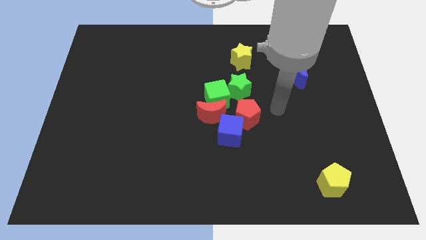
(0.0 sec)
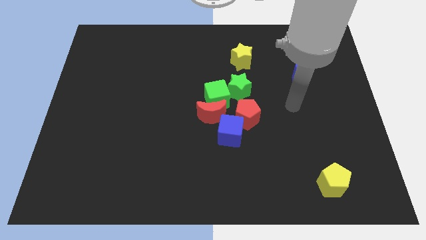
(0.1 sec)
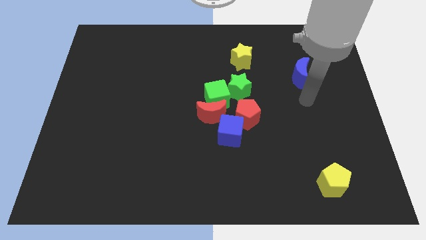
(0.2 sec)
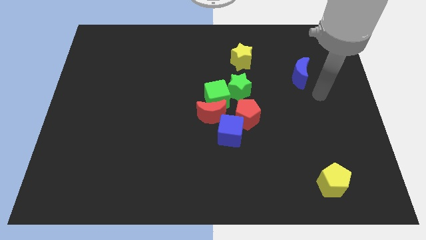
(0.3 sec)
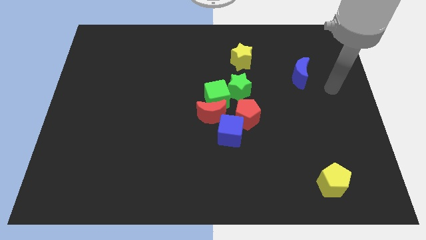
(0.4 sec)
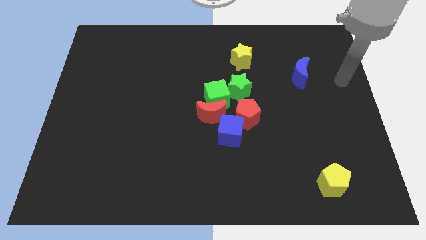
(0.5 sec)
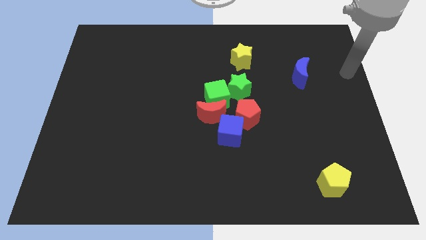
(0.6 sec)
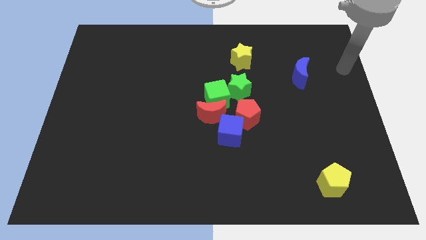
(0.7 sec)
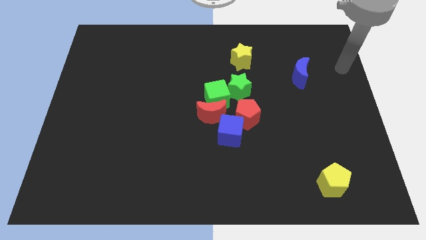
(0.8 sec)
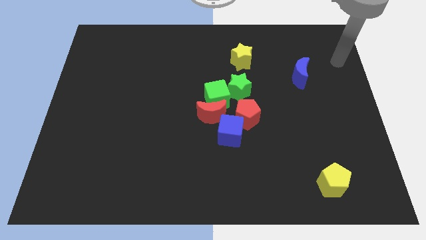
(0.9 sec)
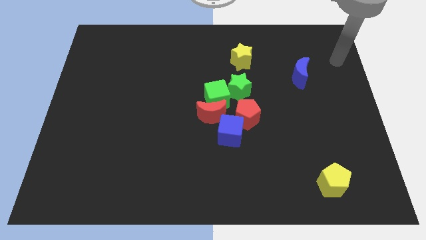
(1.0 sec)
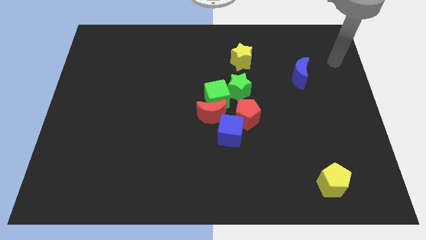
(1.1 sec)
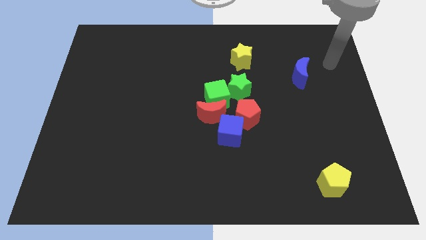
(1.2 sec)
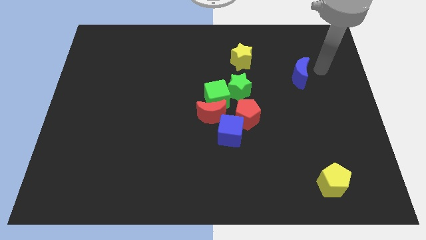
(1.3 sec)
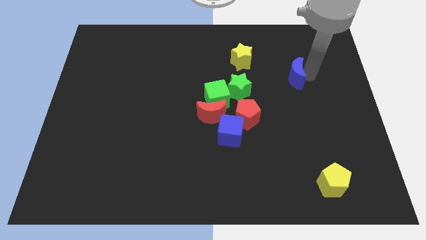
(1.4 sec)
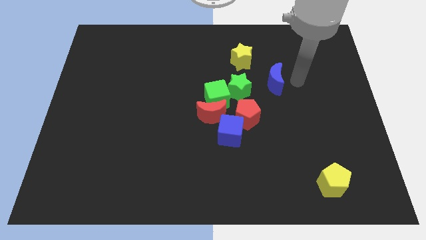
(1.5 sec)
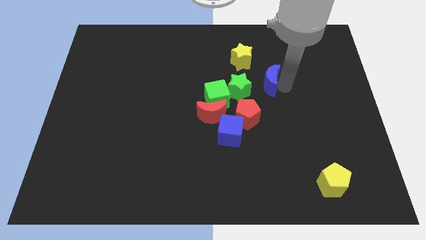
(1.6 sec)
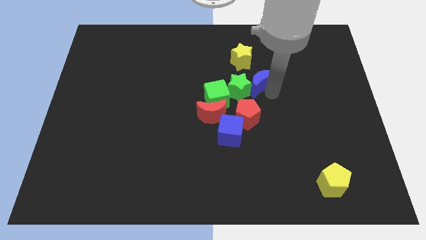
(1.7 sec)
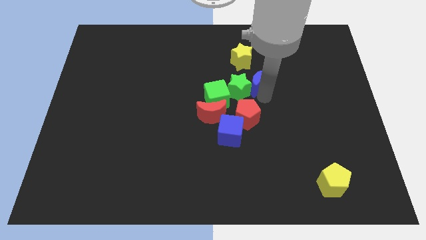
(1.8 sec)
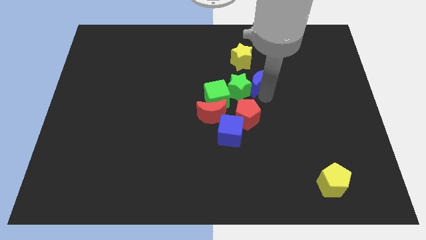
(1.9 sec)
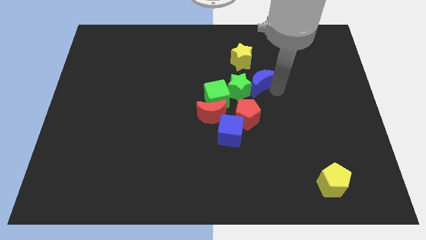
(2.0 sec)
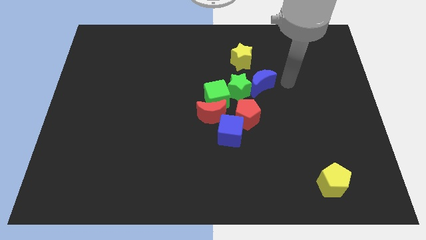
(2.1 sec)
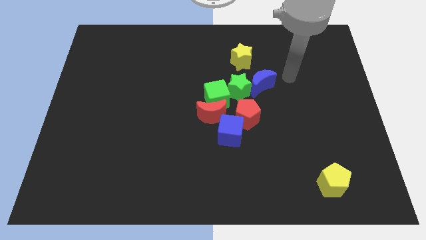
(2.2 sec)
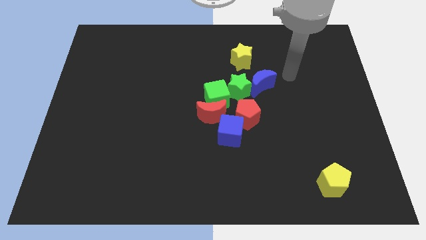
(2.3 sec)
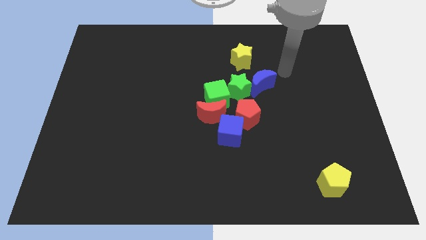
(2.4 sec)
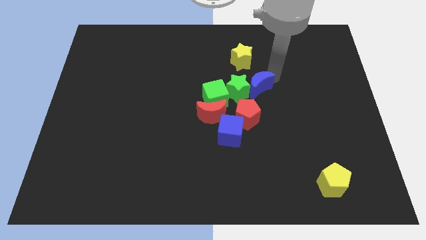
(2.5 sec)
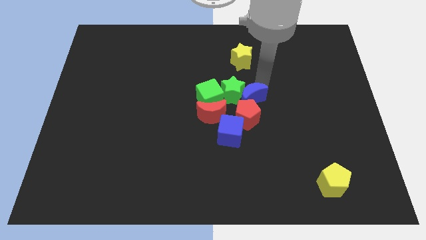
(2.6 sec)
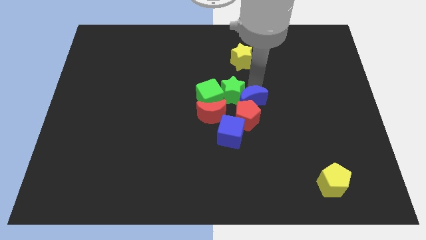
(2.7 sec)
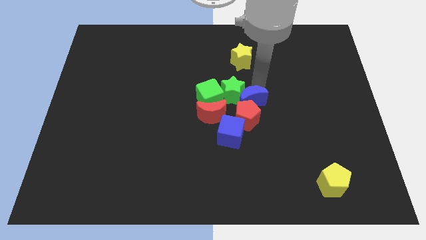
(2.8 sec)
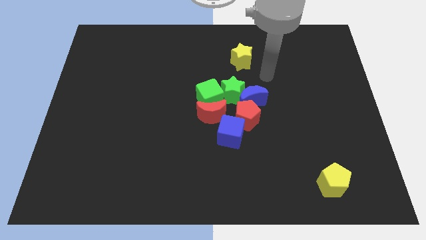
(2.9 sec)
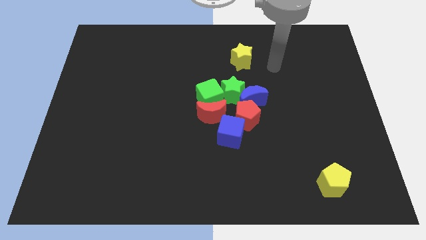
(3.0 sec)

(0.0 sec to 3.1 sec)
push the blue crescent to the right of the green star

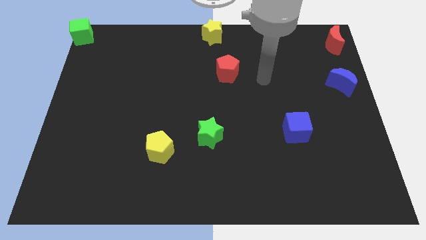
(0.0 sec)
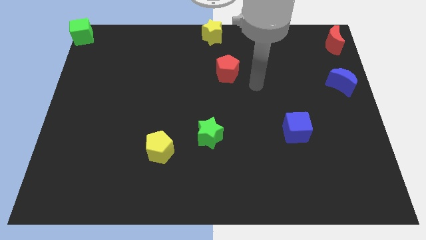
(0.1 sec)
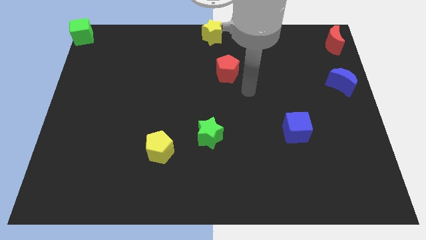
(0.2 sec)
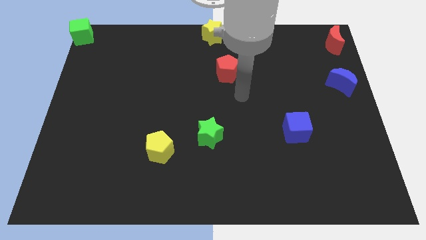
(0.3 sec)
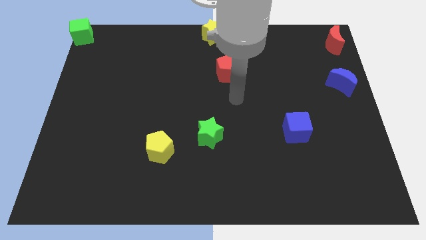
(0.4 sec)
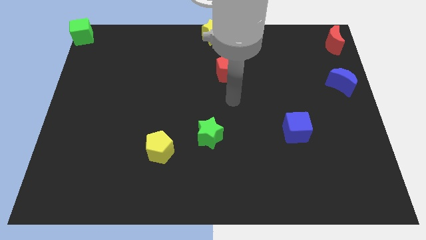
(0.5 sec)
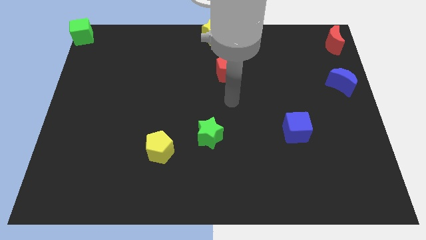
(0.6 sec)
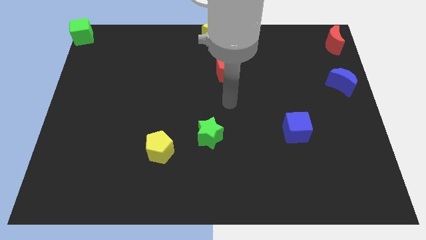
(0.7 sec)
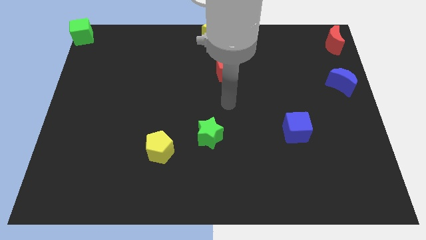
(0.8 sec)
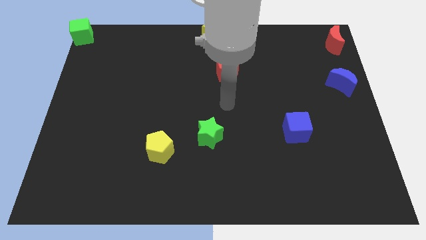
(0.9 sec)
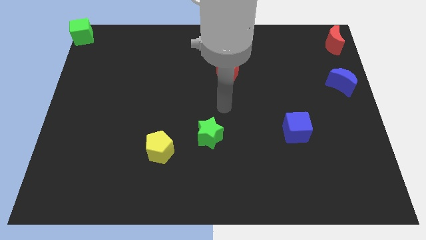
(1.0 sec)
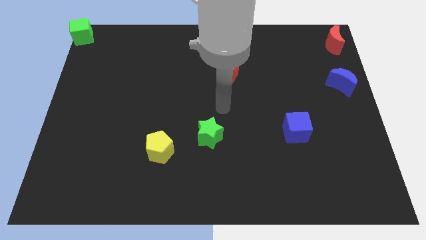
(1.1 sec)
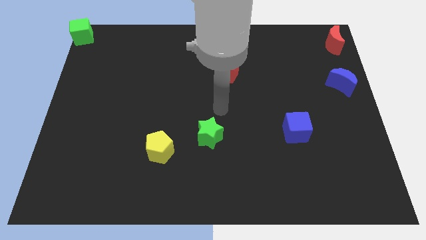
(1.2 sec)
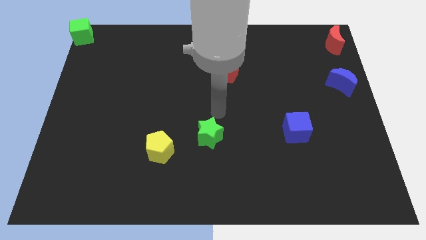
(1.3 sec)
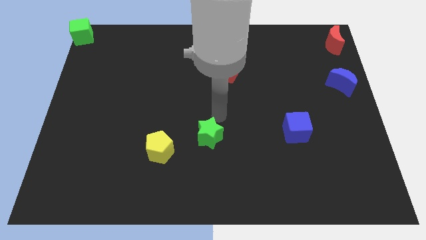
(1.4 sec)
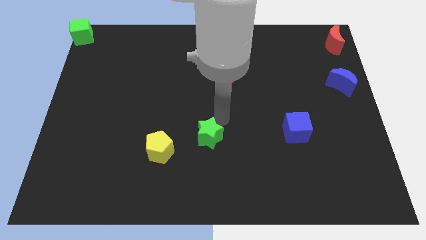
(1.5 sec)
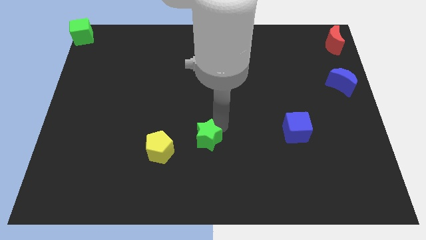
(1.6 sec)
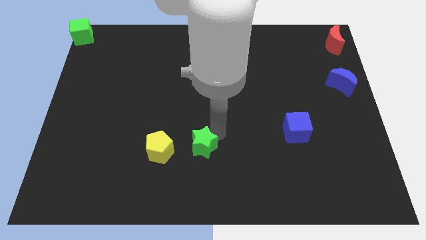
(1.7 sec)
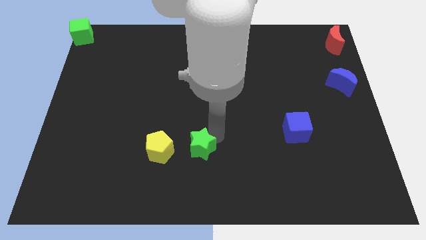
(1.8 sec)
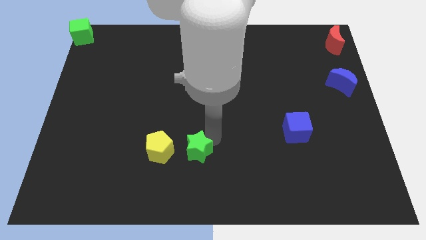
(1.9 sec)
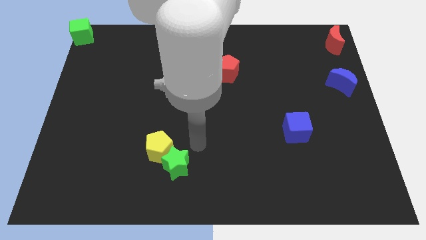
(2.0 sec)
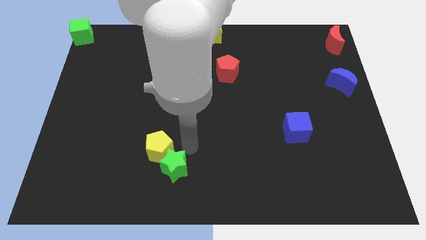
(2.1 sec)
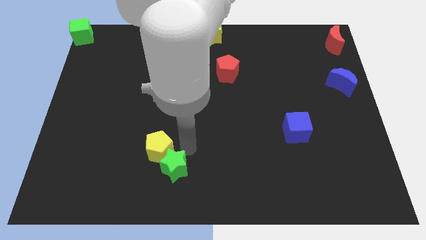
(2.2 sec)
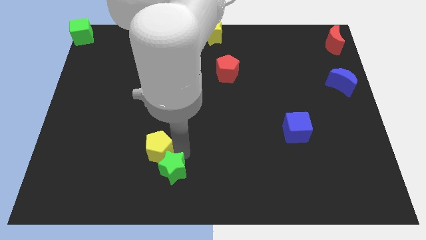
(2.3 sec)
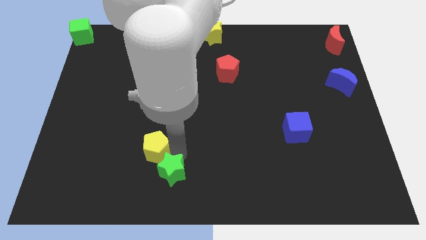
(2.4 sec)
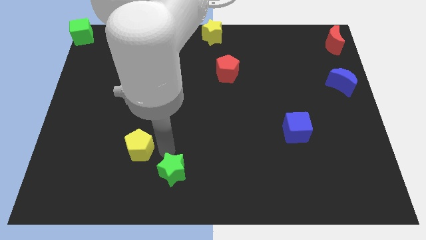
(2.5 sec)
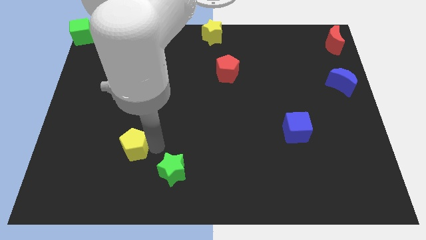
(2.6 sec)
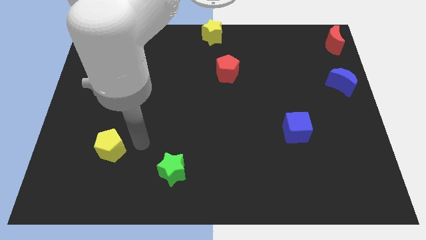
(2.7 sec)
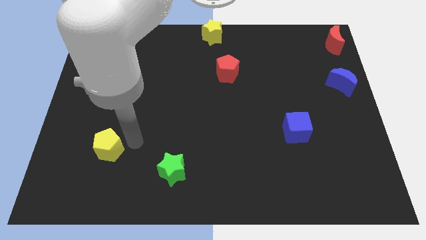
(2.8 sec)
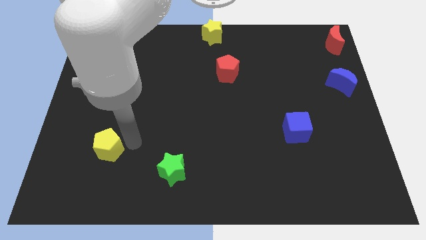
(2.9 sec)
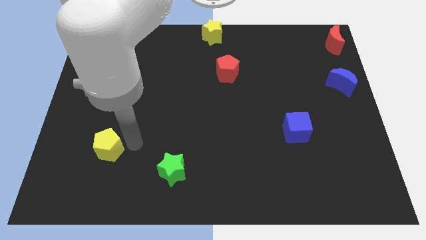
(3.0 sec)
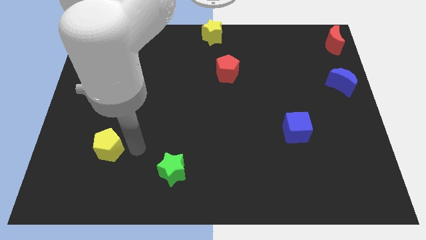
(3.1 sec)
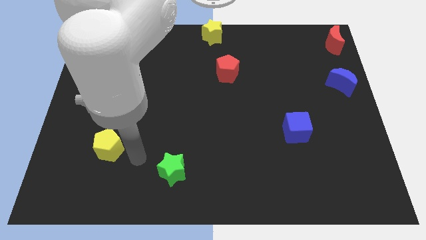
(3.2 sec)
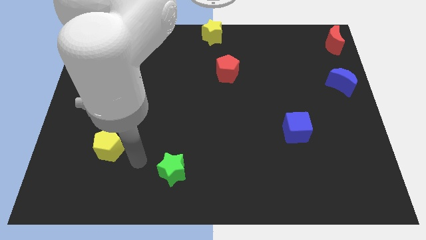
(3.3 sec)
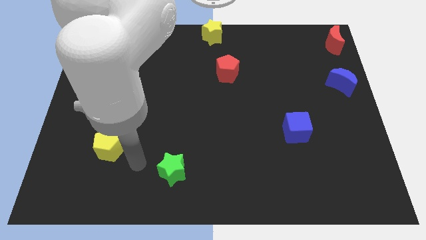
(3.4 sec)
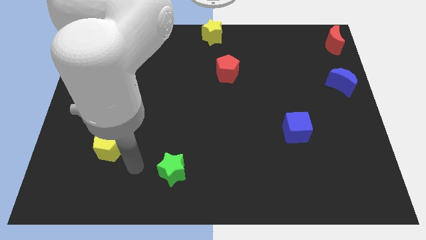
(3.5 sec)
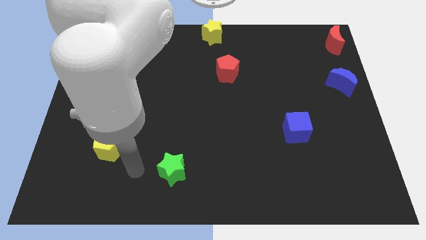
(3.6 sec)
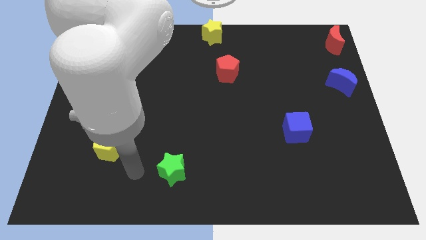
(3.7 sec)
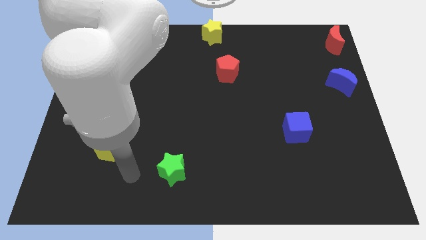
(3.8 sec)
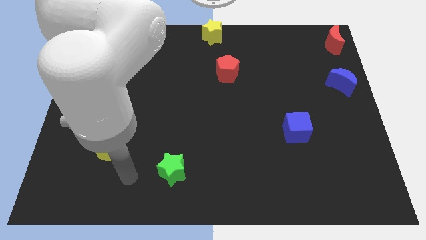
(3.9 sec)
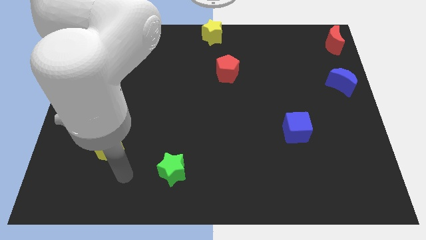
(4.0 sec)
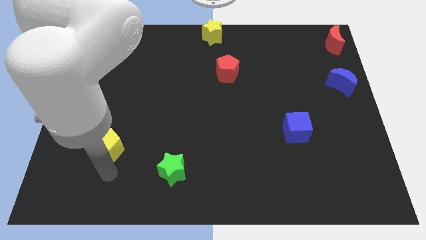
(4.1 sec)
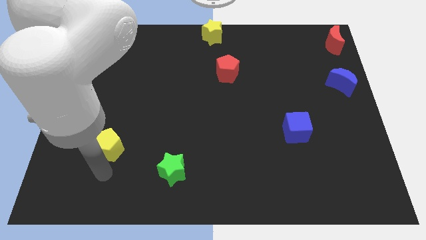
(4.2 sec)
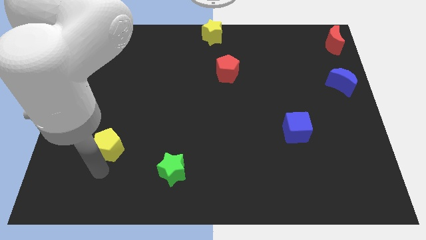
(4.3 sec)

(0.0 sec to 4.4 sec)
separate the green star and yellow pentagon

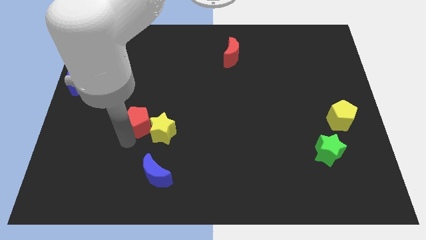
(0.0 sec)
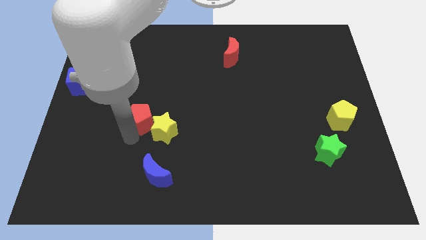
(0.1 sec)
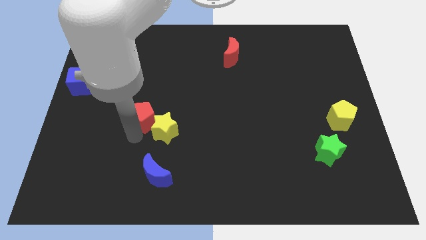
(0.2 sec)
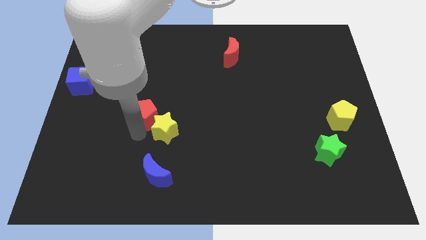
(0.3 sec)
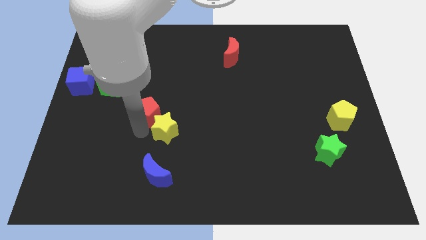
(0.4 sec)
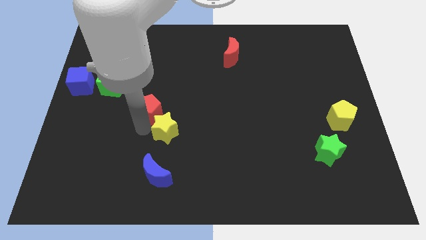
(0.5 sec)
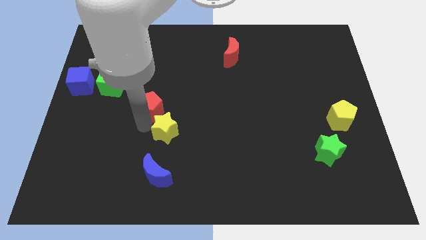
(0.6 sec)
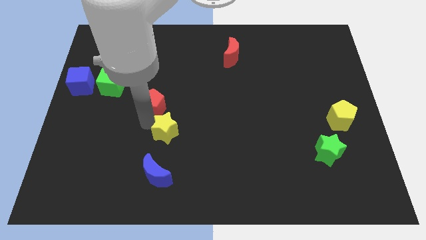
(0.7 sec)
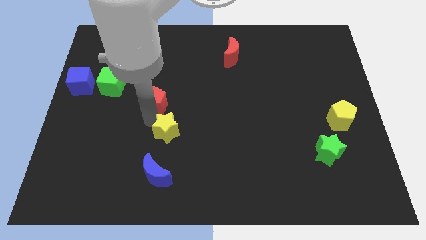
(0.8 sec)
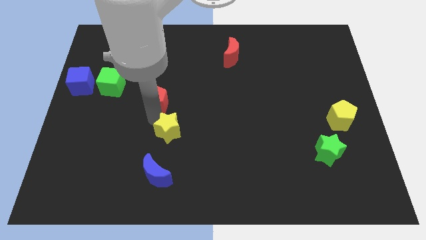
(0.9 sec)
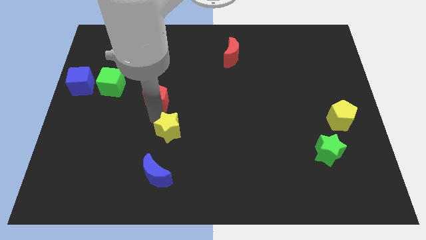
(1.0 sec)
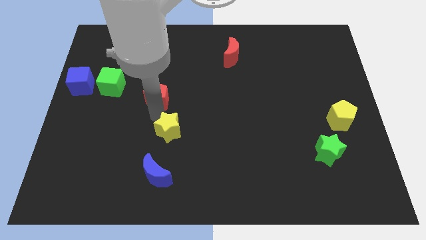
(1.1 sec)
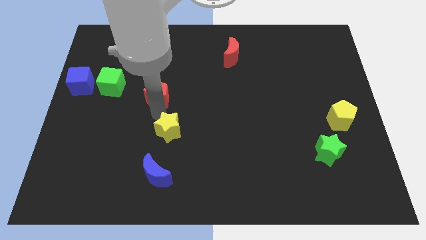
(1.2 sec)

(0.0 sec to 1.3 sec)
separate the red pentagon from the yellow star
